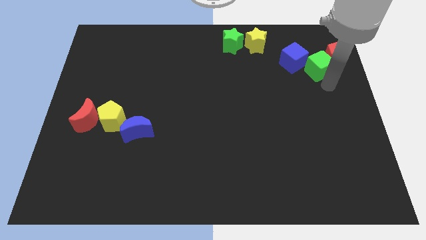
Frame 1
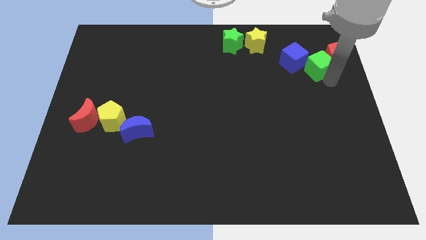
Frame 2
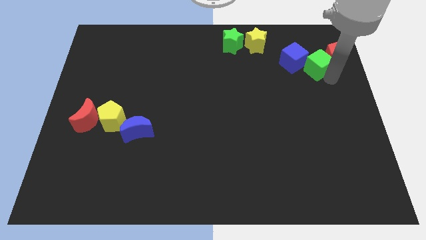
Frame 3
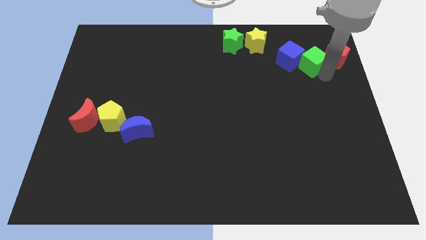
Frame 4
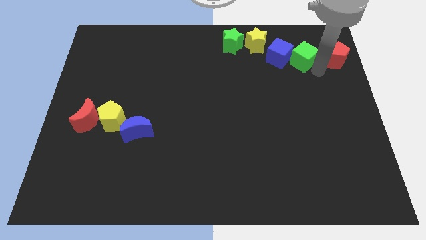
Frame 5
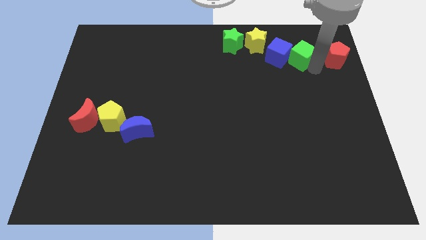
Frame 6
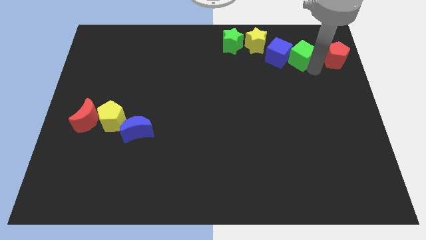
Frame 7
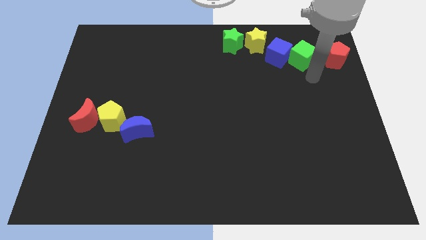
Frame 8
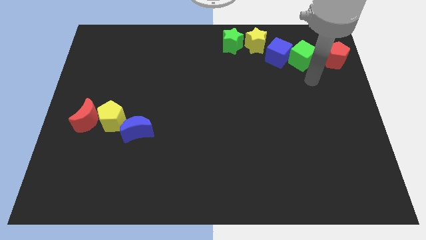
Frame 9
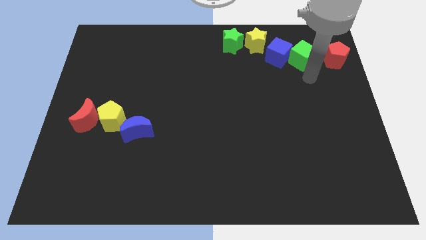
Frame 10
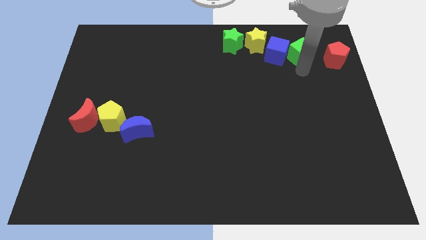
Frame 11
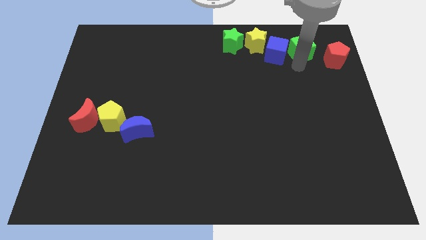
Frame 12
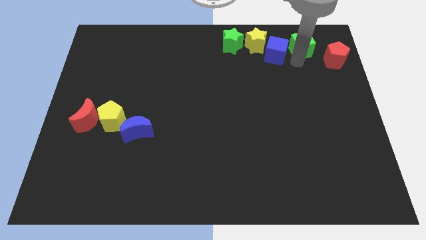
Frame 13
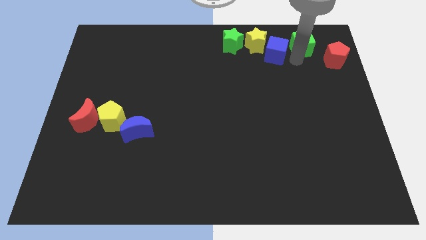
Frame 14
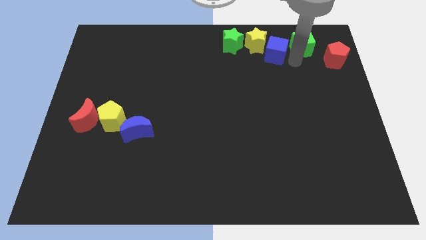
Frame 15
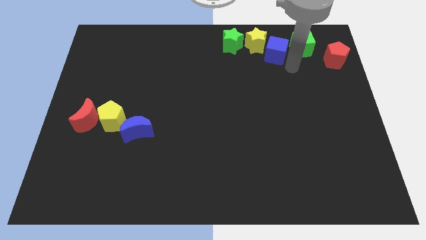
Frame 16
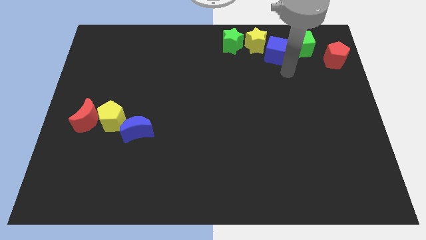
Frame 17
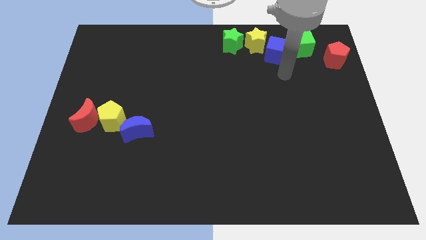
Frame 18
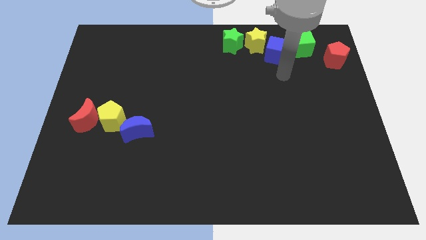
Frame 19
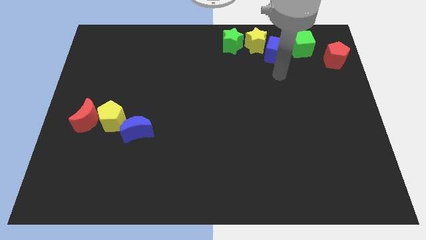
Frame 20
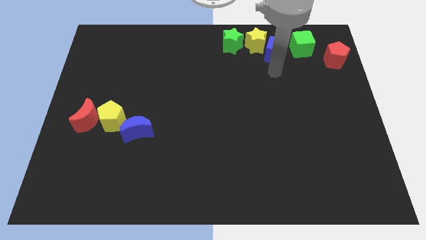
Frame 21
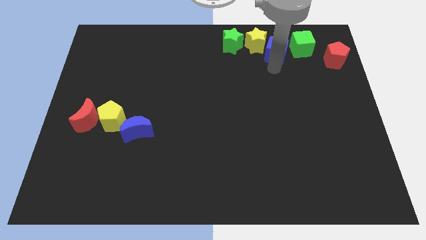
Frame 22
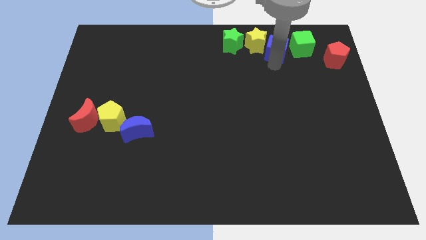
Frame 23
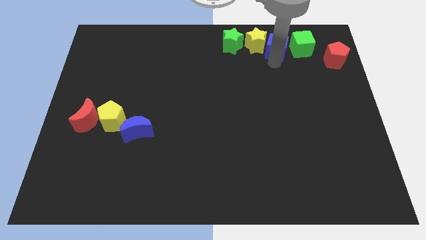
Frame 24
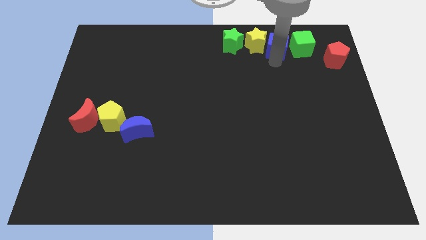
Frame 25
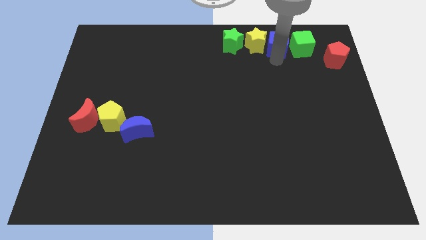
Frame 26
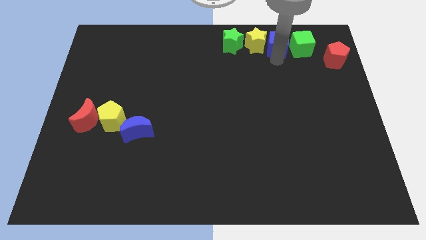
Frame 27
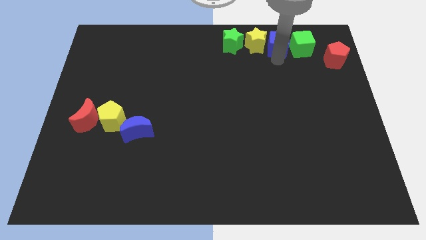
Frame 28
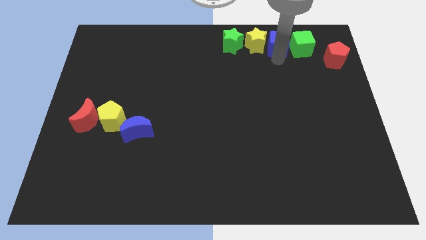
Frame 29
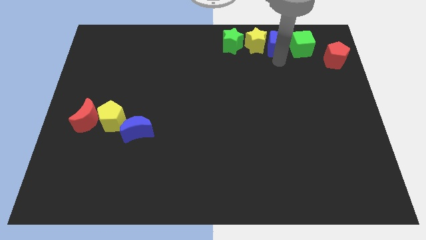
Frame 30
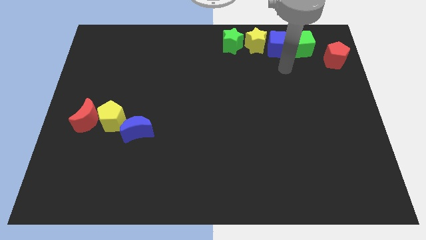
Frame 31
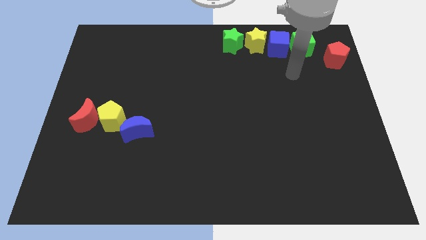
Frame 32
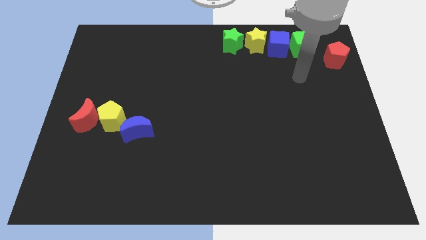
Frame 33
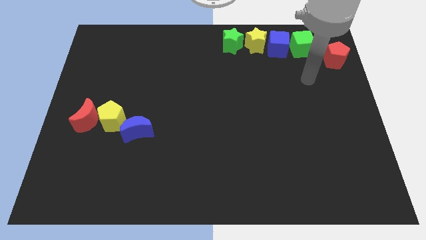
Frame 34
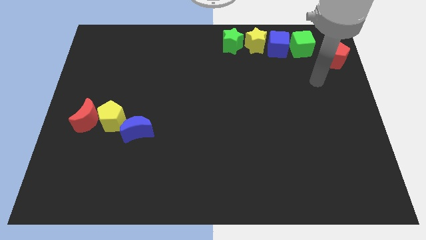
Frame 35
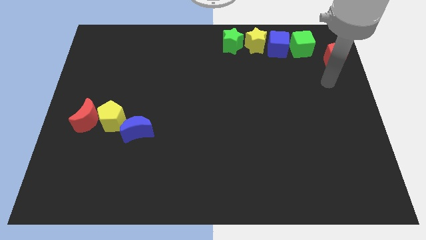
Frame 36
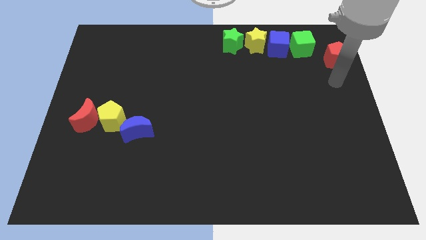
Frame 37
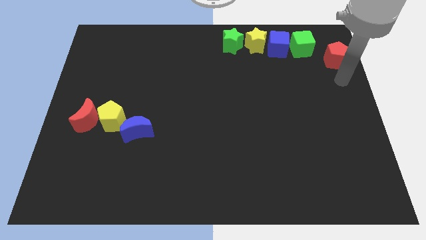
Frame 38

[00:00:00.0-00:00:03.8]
slightly push the green cubeblue cube to the right side of the yellow star

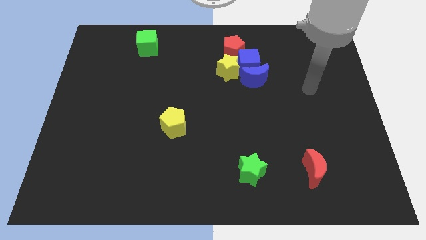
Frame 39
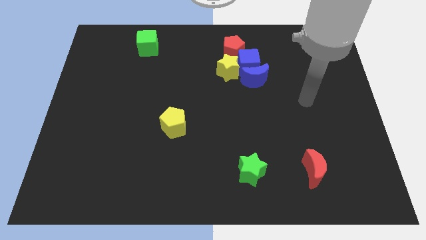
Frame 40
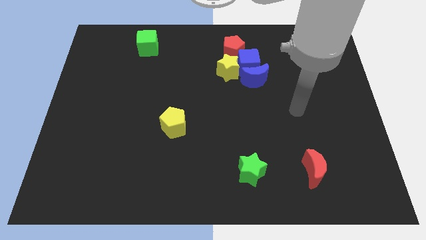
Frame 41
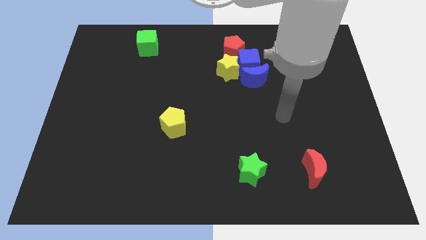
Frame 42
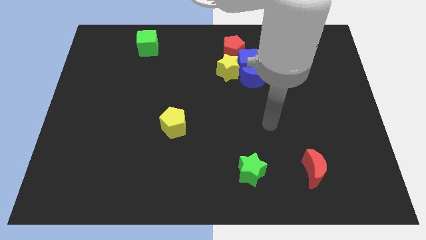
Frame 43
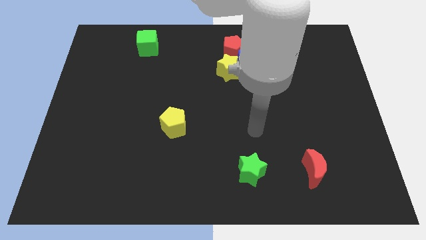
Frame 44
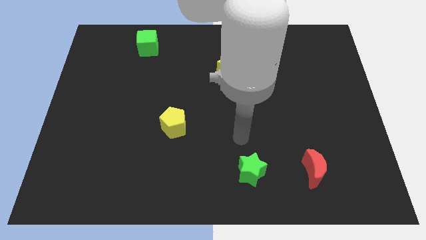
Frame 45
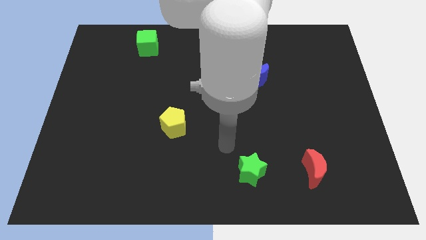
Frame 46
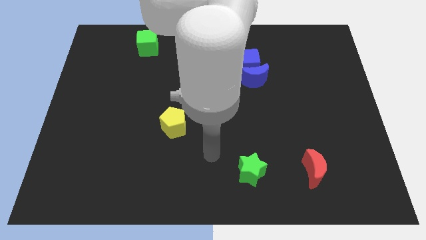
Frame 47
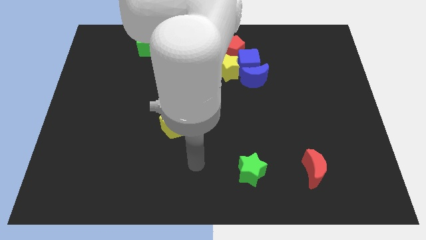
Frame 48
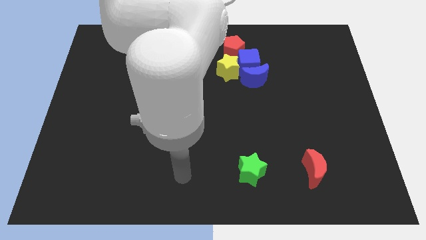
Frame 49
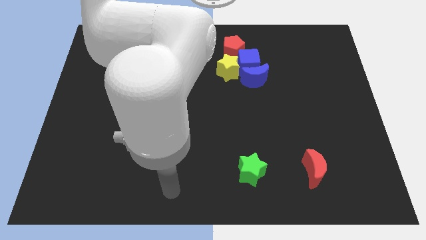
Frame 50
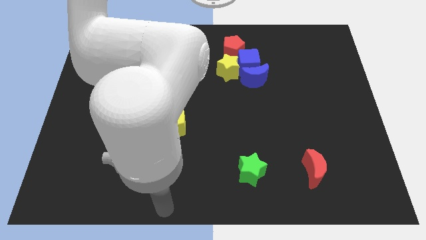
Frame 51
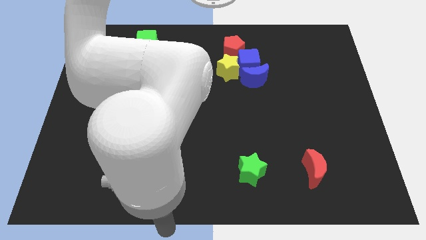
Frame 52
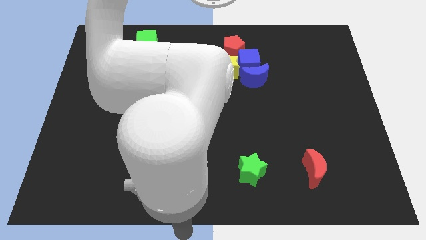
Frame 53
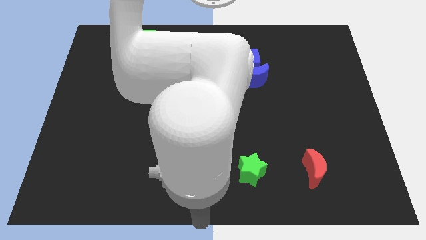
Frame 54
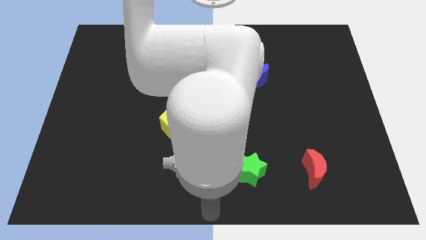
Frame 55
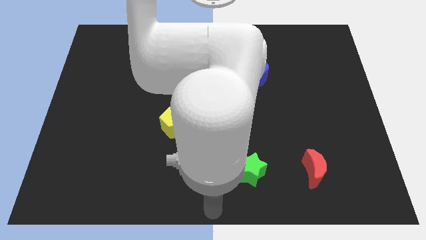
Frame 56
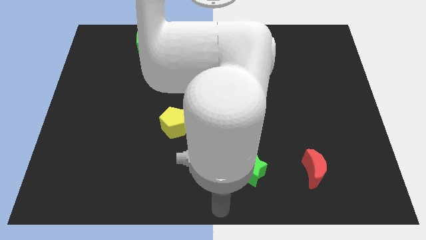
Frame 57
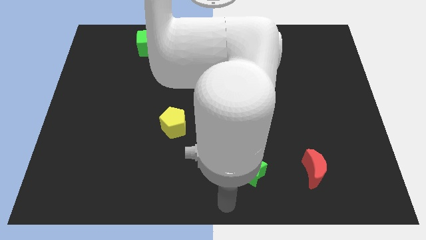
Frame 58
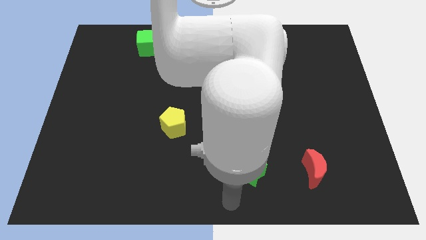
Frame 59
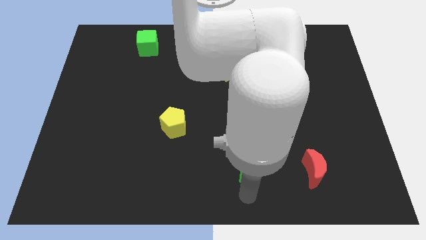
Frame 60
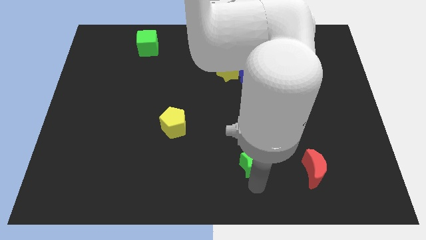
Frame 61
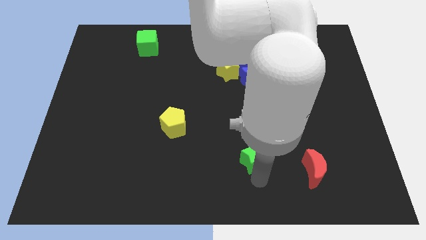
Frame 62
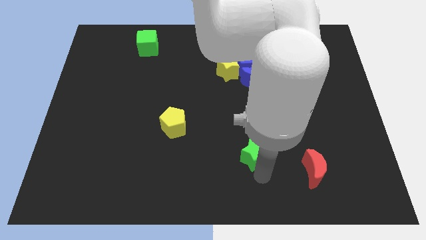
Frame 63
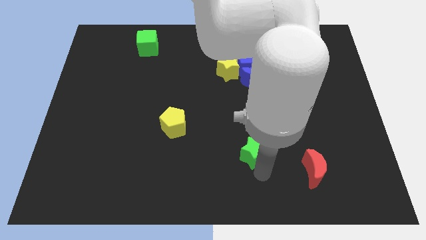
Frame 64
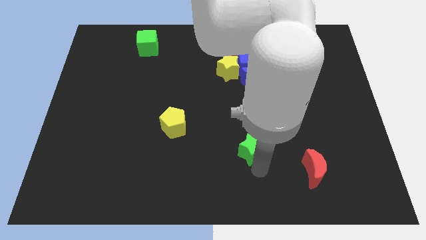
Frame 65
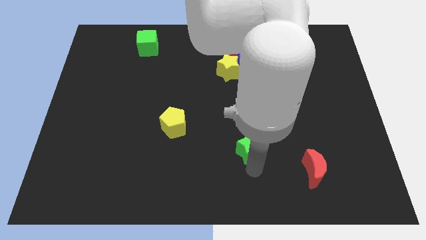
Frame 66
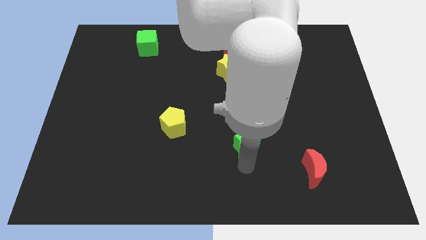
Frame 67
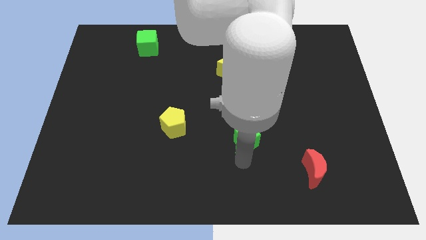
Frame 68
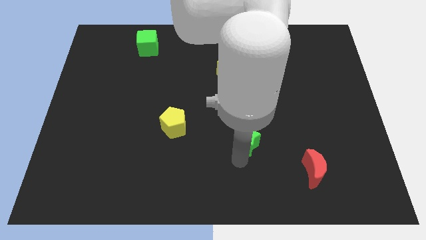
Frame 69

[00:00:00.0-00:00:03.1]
slide green star to the bottom right of yellow pentagon

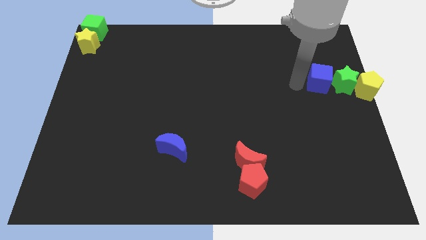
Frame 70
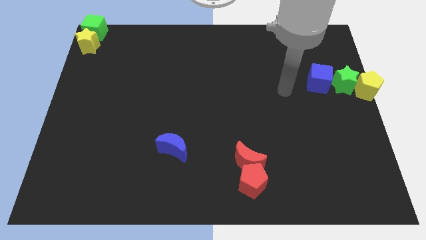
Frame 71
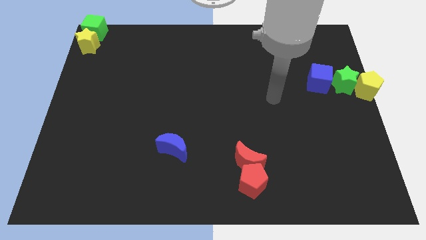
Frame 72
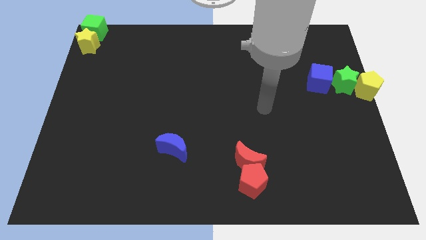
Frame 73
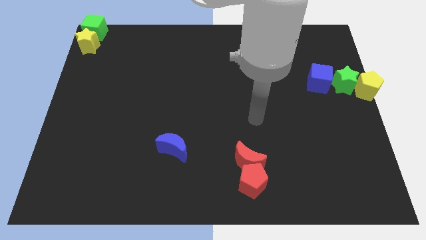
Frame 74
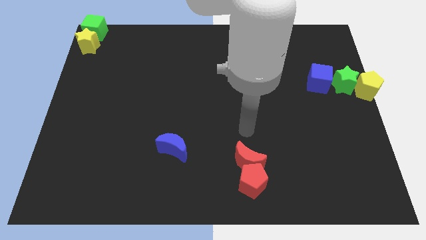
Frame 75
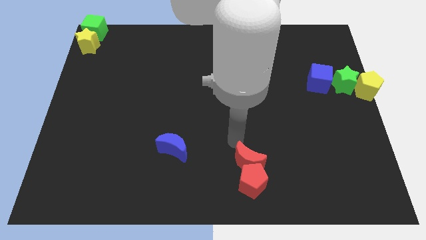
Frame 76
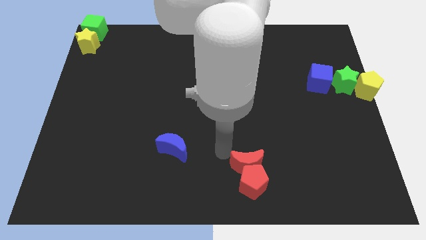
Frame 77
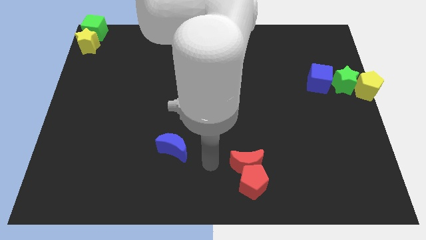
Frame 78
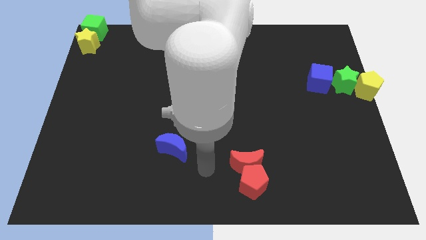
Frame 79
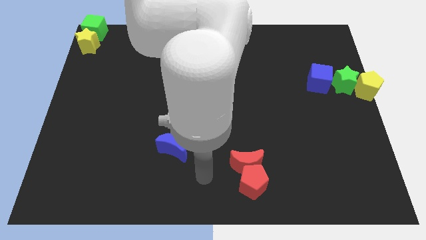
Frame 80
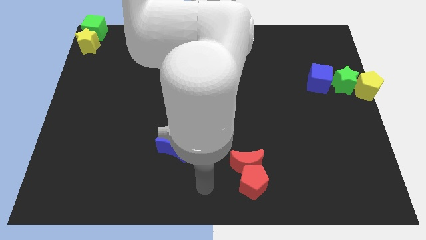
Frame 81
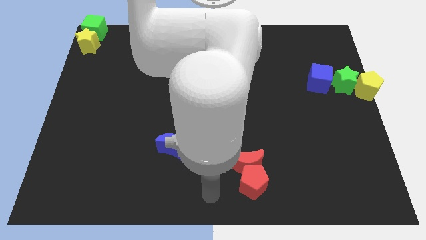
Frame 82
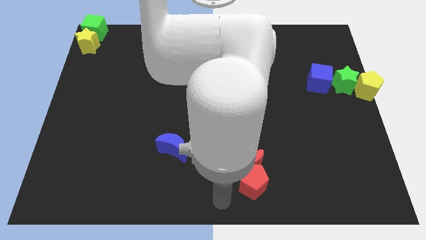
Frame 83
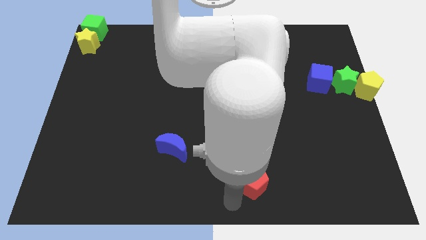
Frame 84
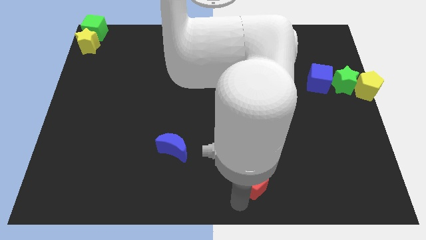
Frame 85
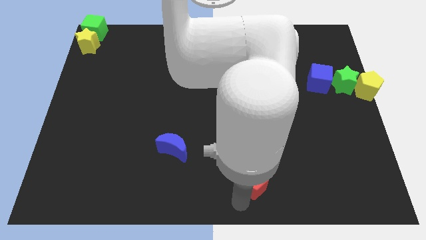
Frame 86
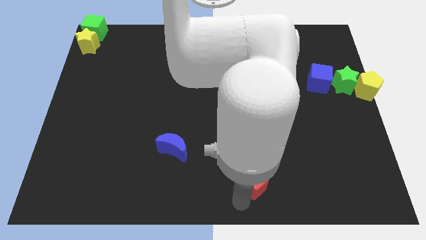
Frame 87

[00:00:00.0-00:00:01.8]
slightly touch the red moon and red pentagon

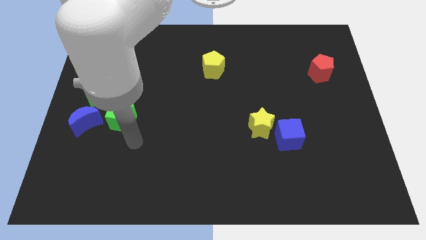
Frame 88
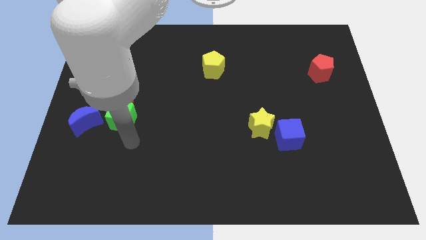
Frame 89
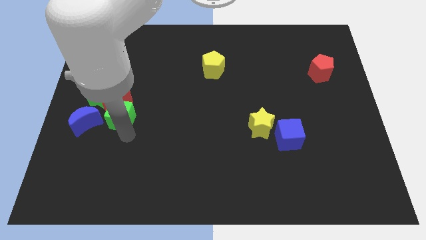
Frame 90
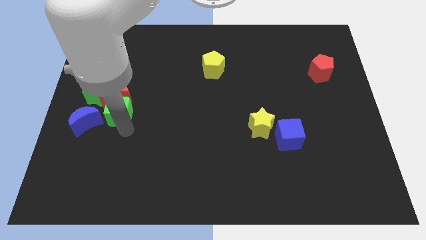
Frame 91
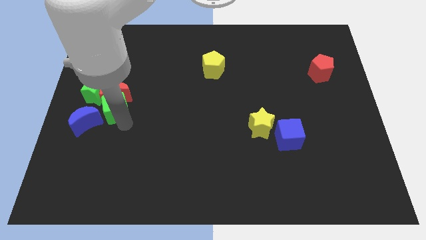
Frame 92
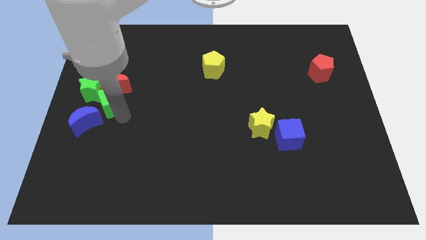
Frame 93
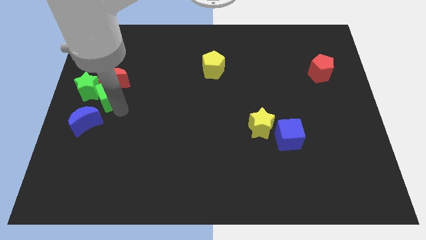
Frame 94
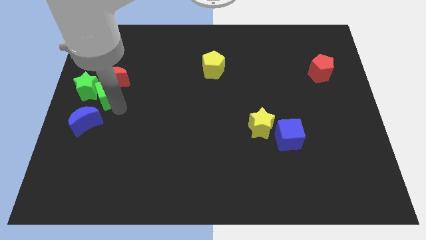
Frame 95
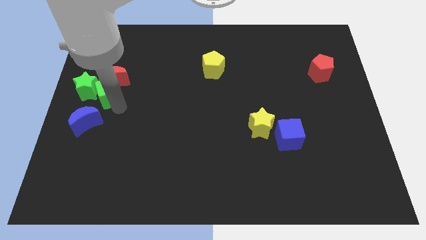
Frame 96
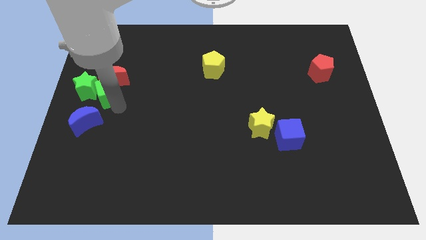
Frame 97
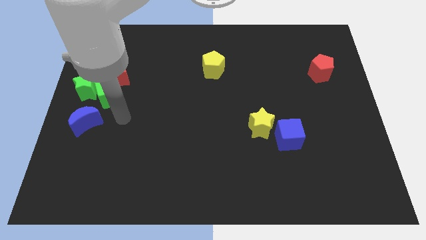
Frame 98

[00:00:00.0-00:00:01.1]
push the green cube into the right side of the green star
